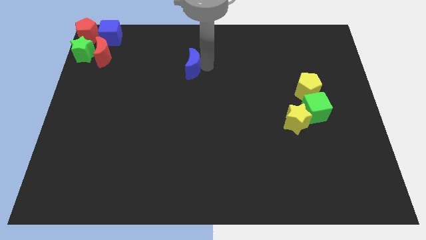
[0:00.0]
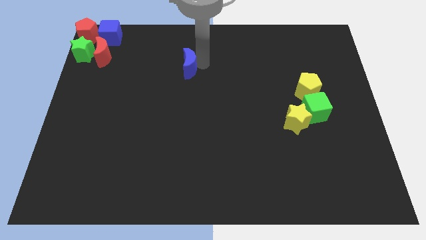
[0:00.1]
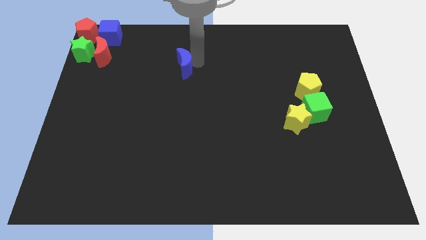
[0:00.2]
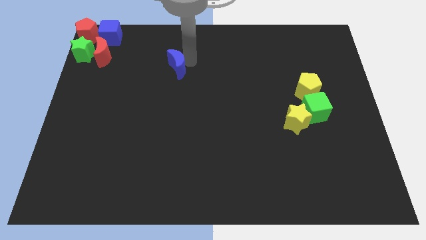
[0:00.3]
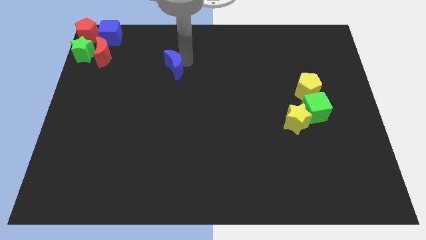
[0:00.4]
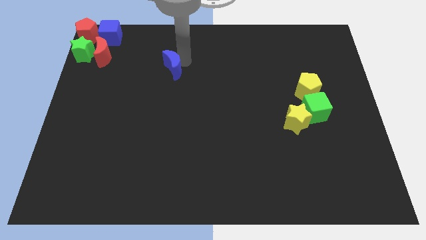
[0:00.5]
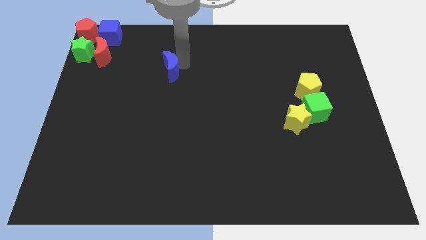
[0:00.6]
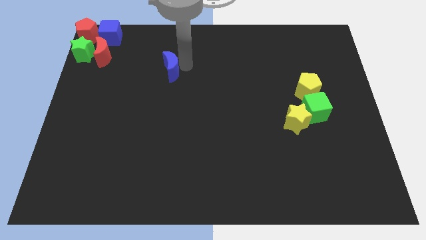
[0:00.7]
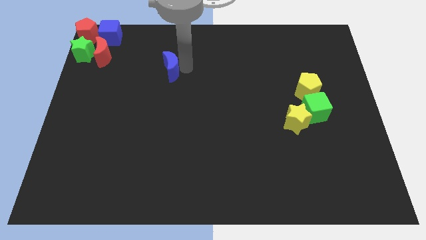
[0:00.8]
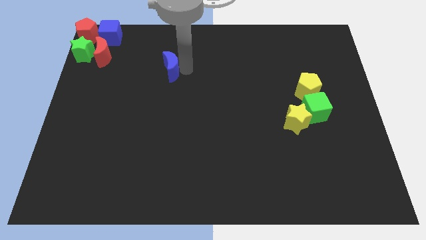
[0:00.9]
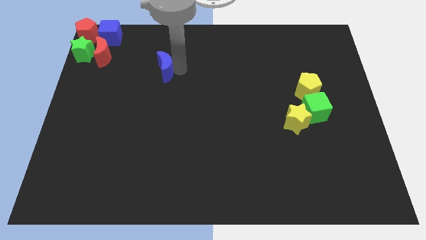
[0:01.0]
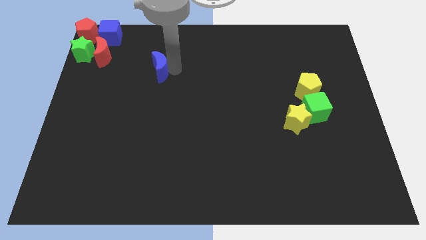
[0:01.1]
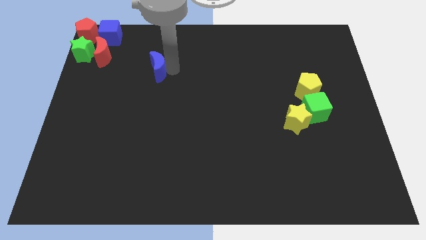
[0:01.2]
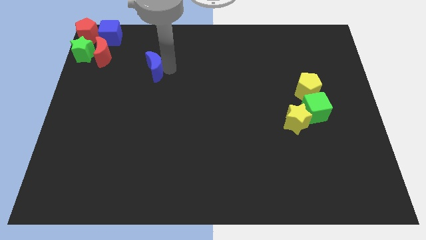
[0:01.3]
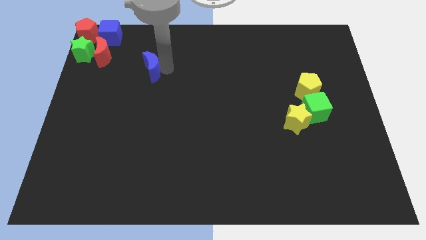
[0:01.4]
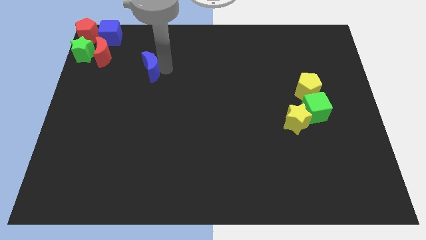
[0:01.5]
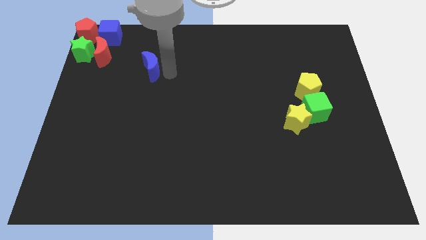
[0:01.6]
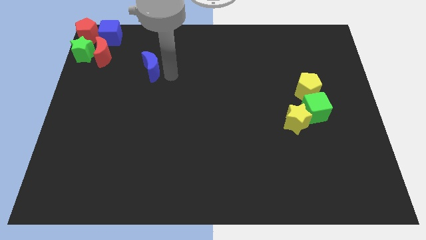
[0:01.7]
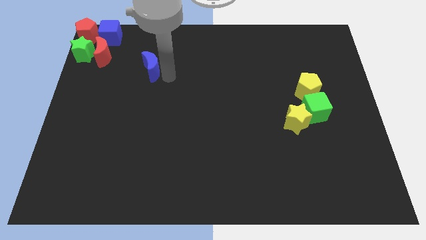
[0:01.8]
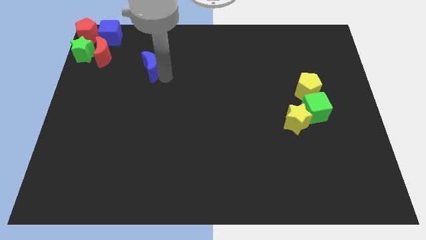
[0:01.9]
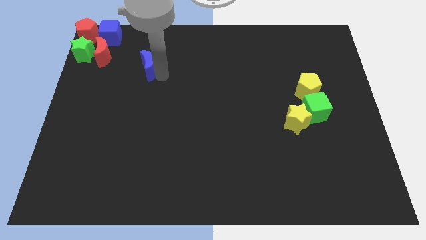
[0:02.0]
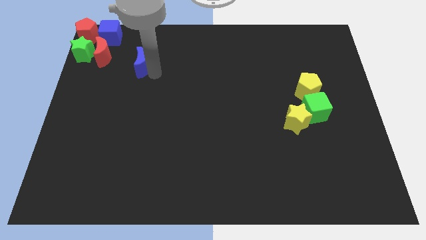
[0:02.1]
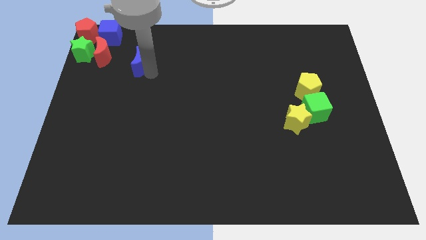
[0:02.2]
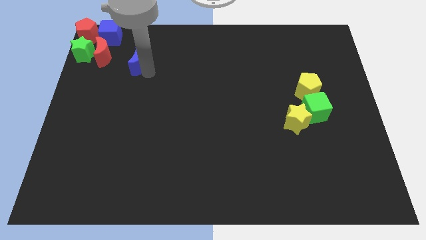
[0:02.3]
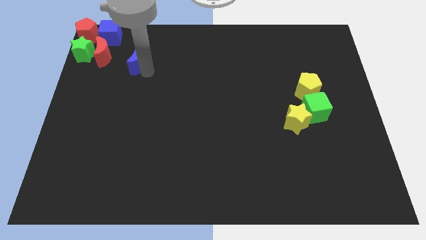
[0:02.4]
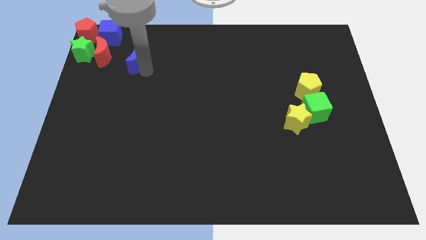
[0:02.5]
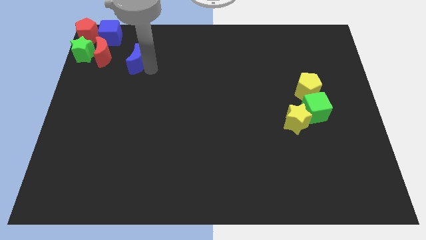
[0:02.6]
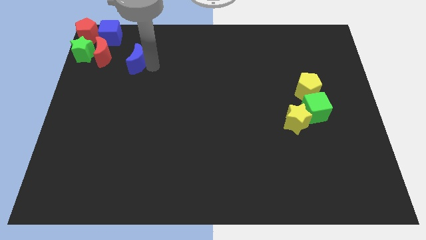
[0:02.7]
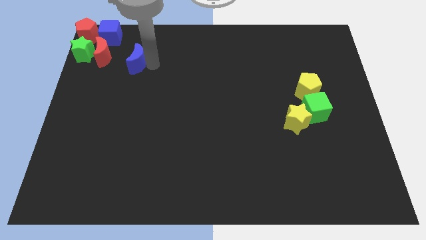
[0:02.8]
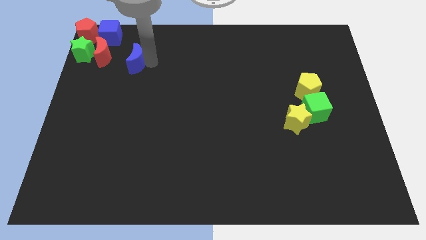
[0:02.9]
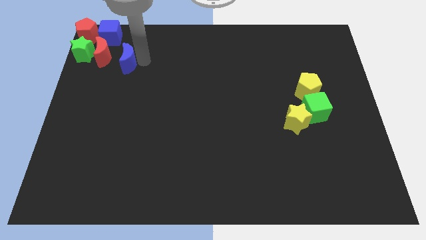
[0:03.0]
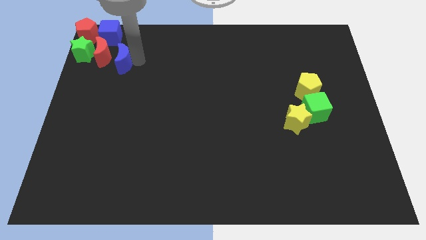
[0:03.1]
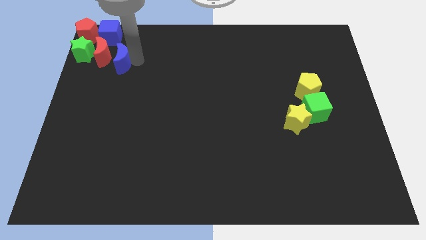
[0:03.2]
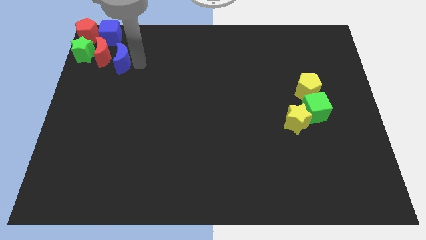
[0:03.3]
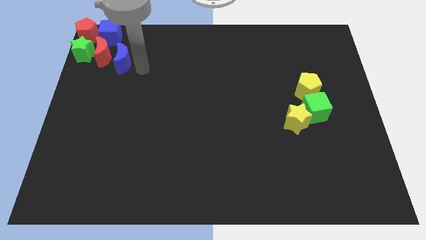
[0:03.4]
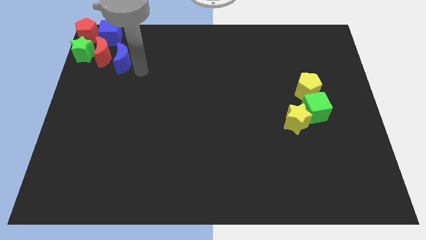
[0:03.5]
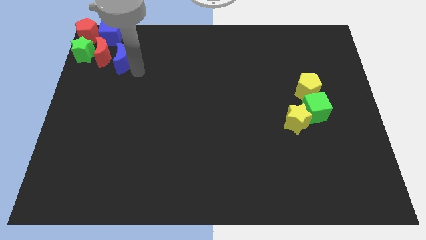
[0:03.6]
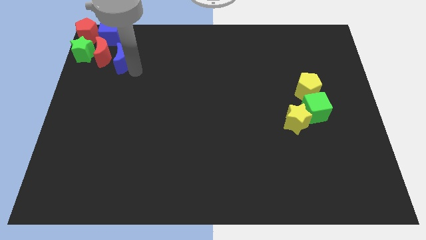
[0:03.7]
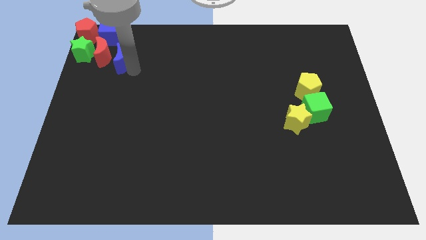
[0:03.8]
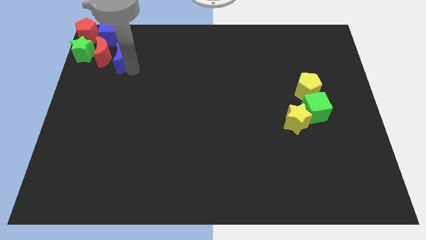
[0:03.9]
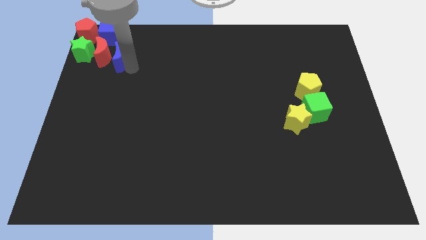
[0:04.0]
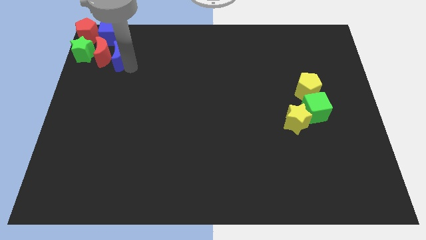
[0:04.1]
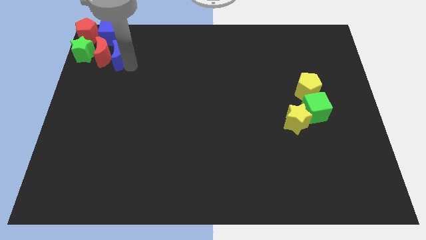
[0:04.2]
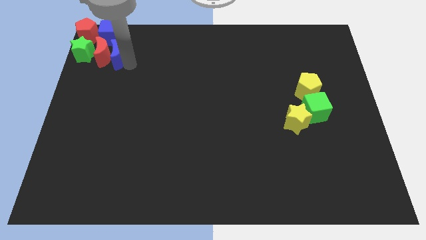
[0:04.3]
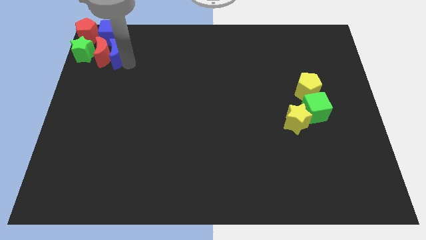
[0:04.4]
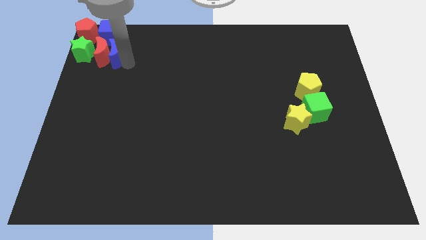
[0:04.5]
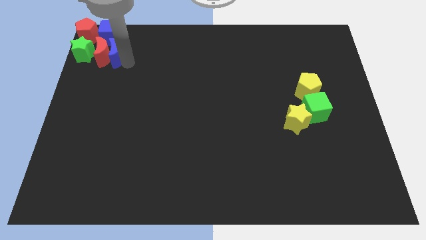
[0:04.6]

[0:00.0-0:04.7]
place blue moon right to red moon

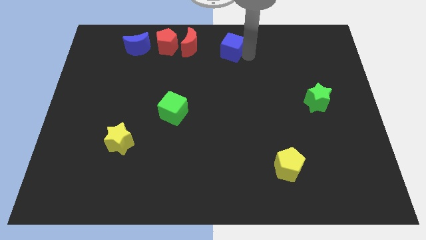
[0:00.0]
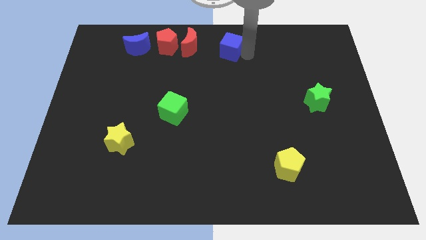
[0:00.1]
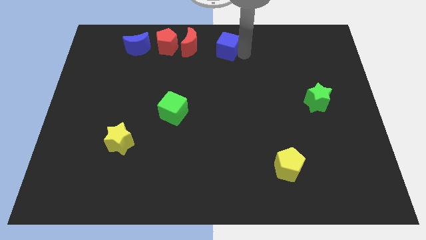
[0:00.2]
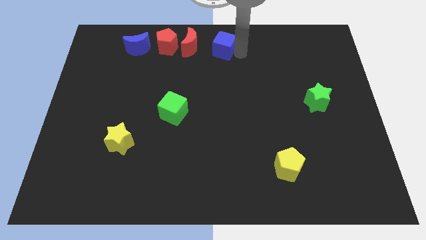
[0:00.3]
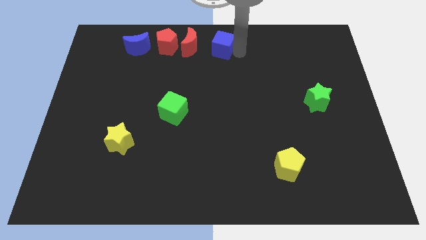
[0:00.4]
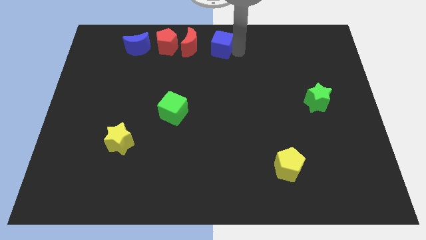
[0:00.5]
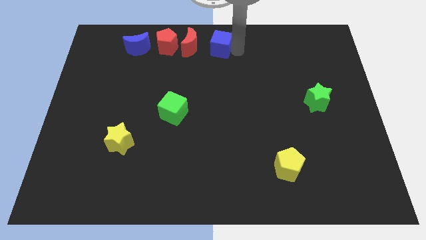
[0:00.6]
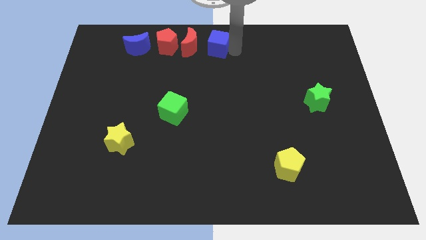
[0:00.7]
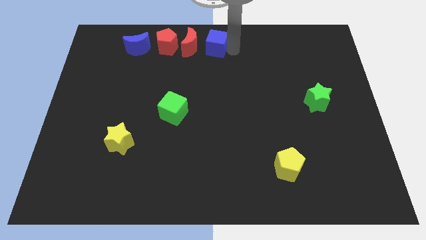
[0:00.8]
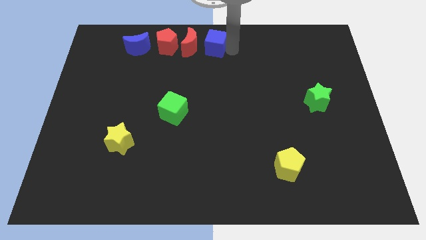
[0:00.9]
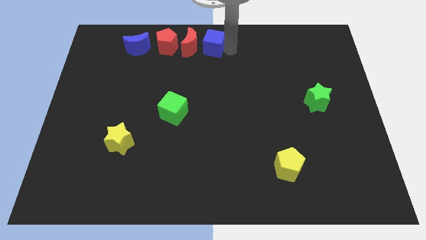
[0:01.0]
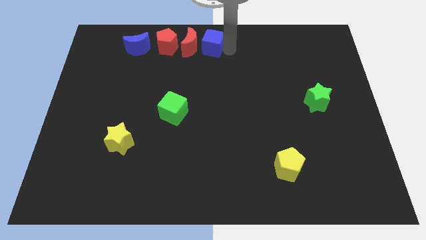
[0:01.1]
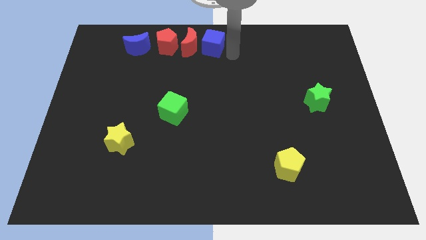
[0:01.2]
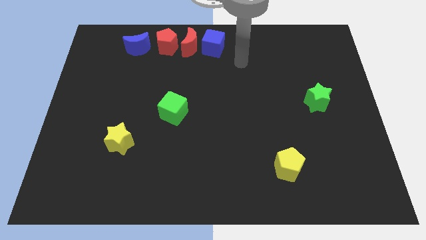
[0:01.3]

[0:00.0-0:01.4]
place the blue cube to the right of red crescent

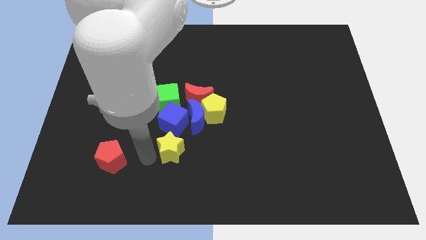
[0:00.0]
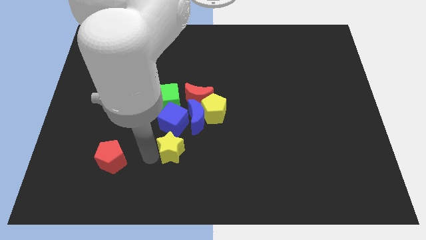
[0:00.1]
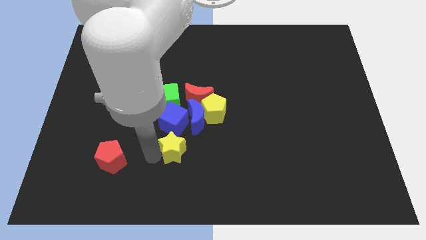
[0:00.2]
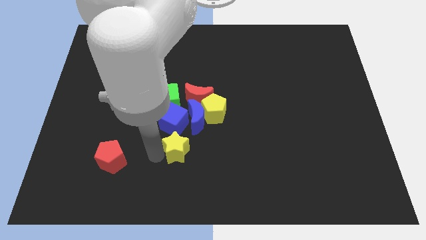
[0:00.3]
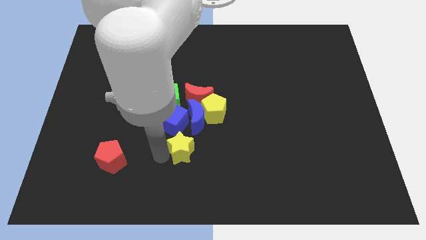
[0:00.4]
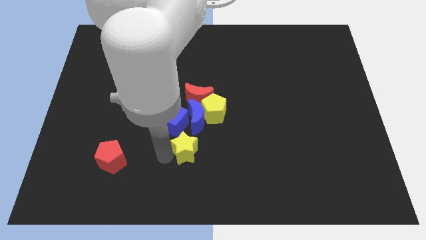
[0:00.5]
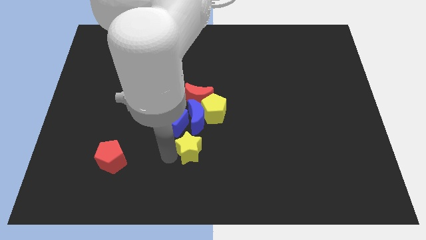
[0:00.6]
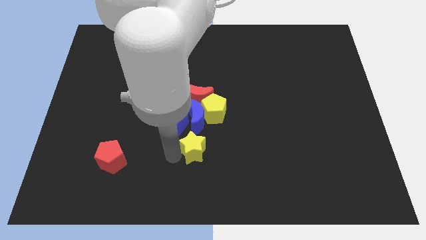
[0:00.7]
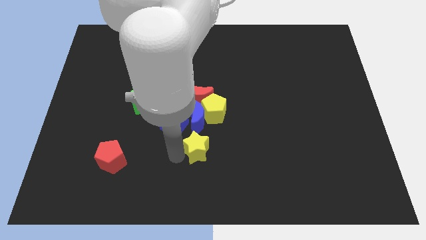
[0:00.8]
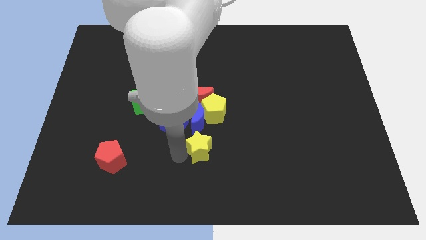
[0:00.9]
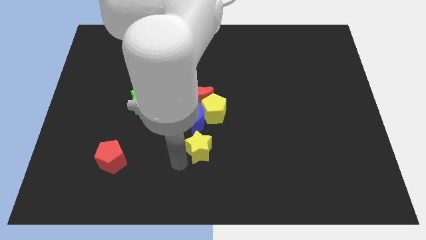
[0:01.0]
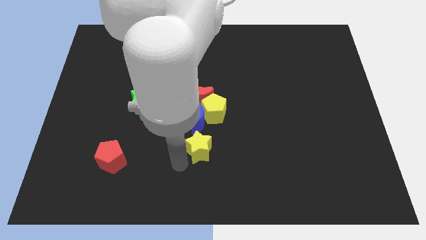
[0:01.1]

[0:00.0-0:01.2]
move the yellow star slightly to the center of the board

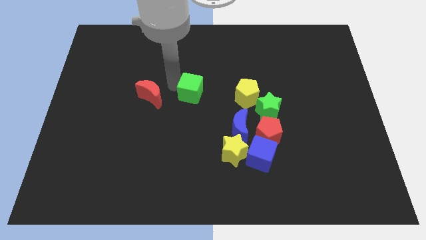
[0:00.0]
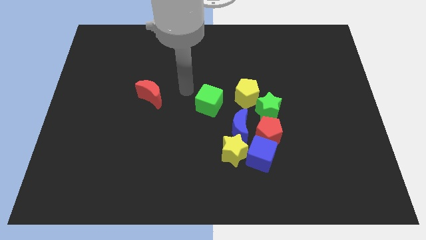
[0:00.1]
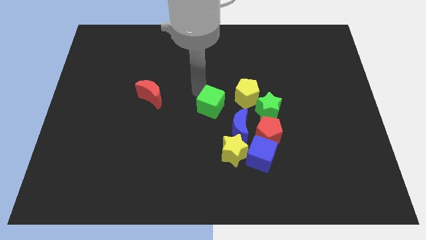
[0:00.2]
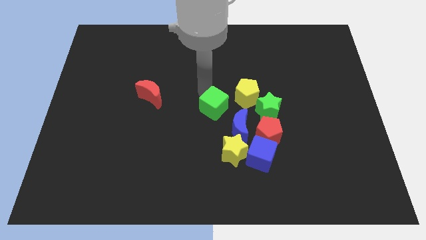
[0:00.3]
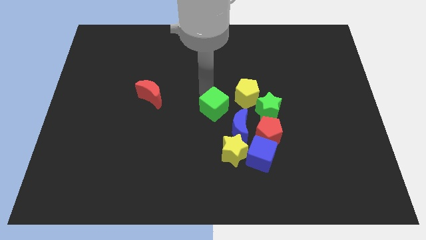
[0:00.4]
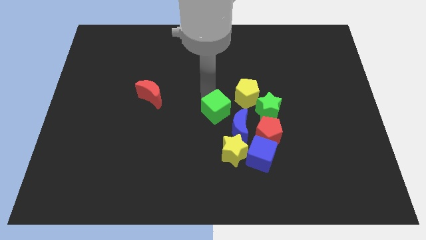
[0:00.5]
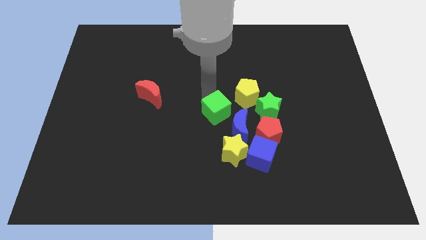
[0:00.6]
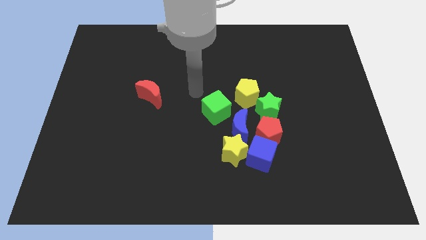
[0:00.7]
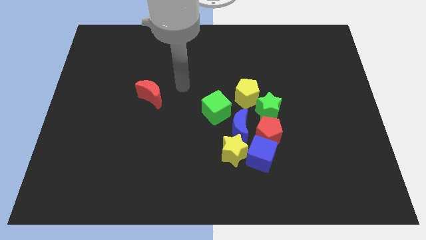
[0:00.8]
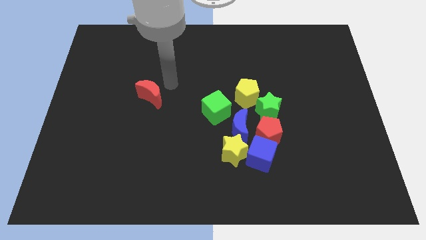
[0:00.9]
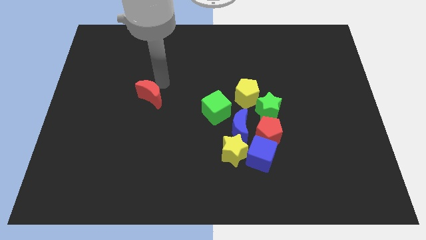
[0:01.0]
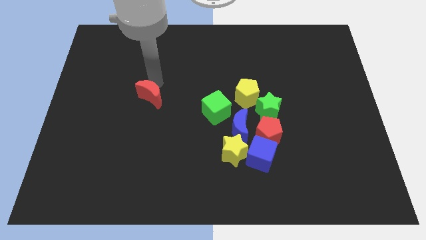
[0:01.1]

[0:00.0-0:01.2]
push the green cube to the left of the blue crescent

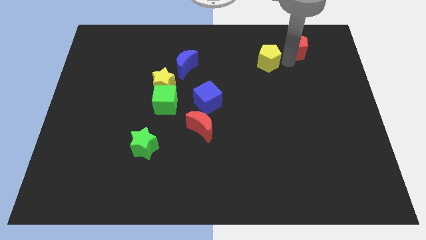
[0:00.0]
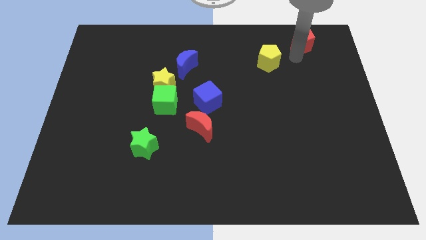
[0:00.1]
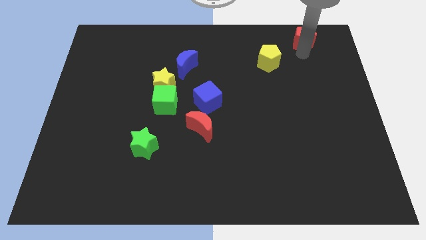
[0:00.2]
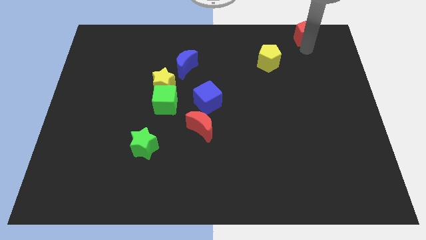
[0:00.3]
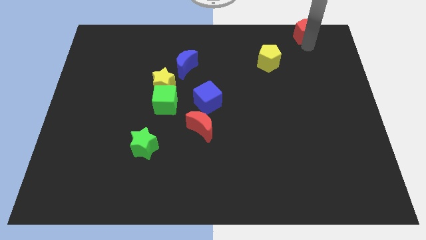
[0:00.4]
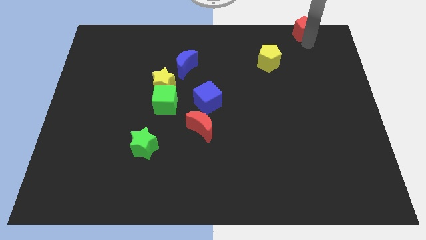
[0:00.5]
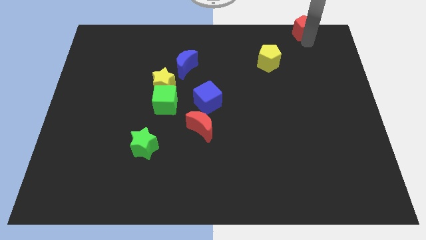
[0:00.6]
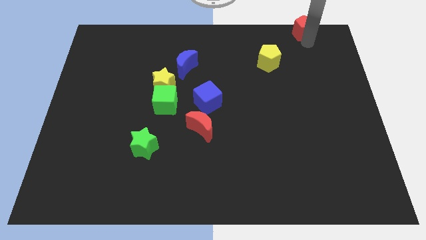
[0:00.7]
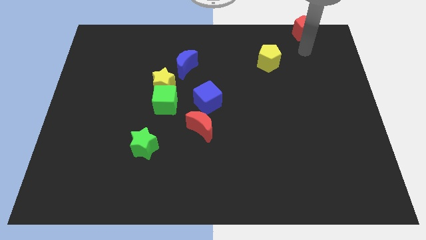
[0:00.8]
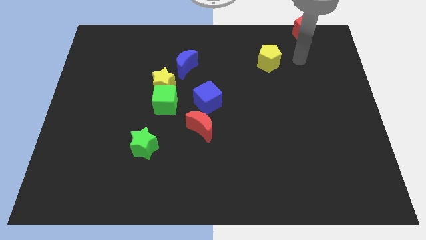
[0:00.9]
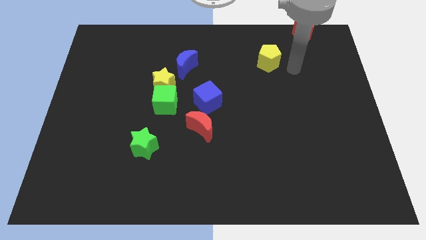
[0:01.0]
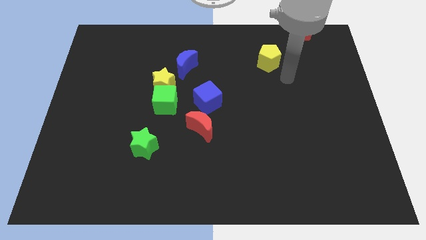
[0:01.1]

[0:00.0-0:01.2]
push the red pentagon to the top right side of the board
